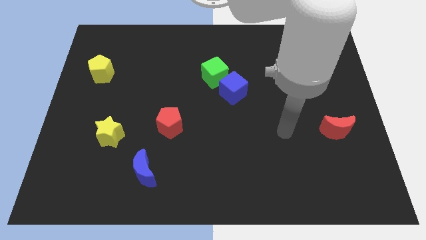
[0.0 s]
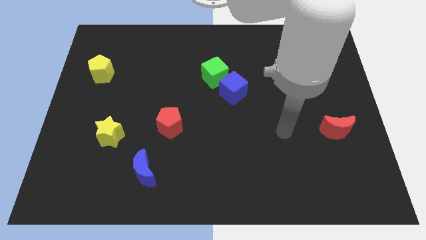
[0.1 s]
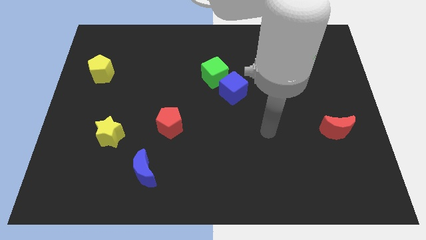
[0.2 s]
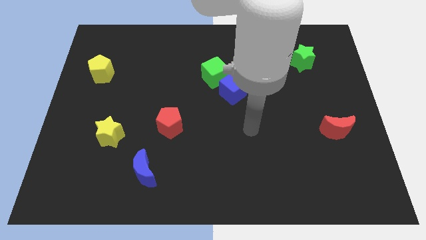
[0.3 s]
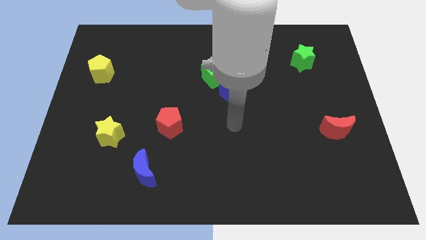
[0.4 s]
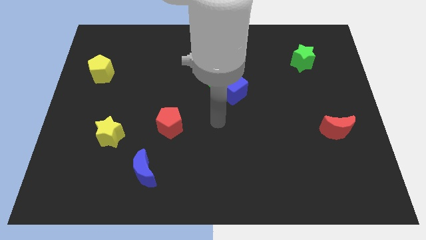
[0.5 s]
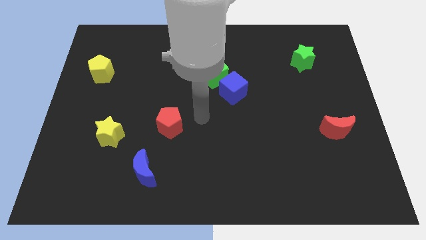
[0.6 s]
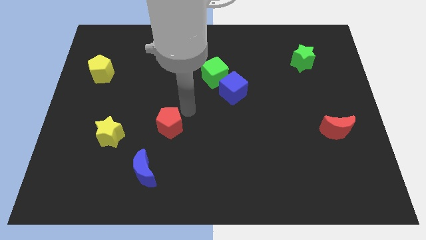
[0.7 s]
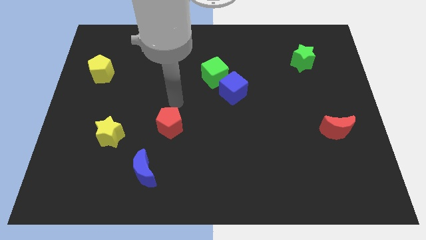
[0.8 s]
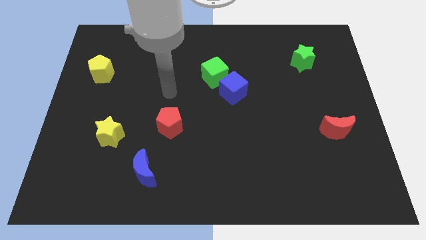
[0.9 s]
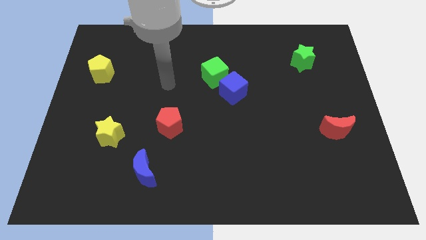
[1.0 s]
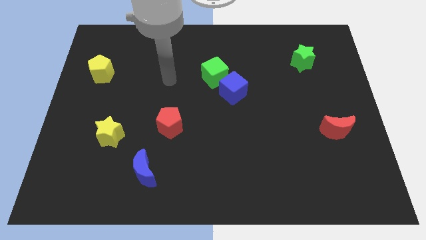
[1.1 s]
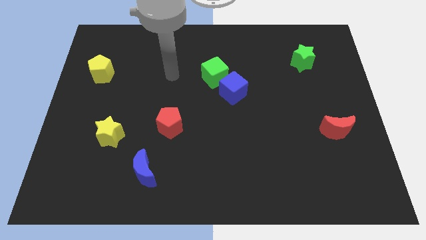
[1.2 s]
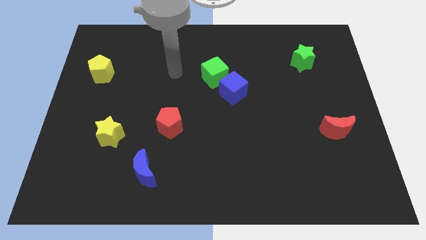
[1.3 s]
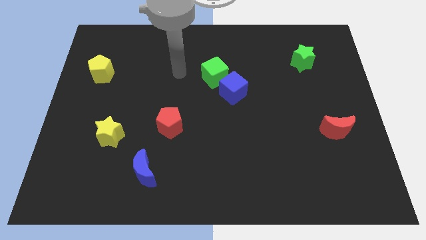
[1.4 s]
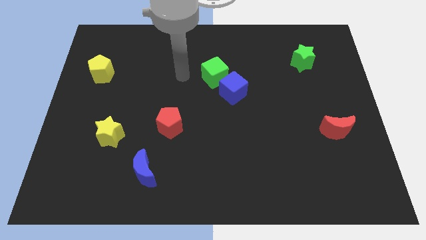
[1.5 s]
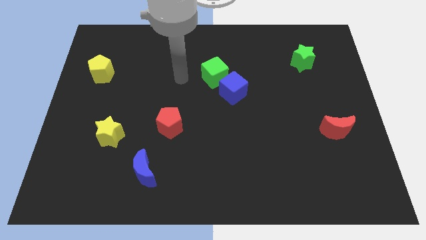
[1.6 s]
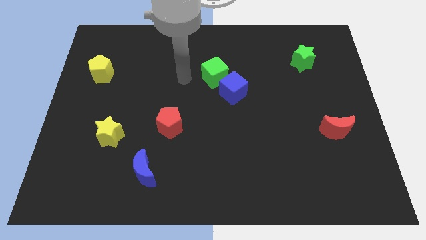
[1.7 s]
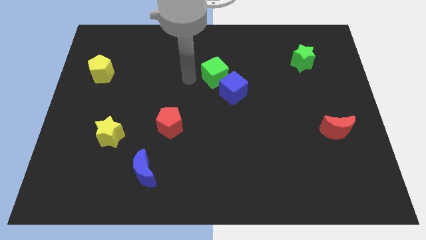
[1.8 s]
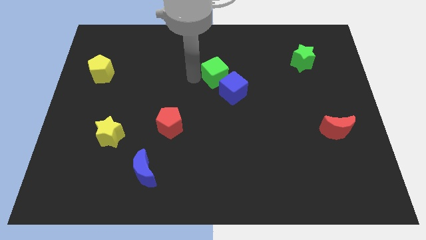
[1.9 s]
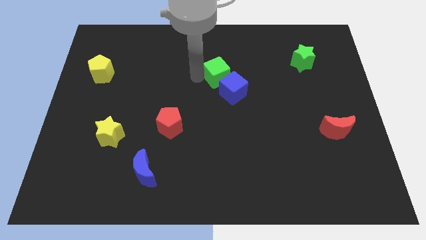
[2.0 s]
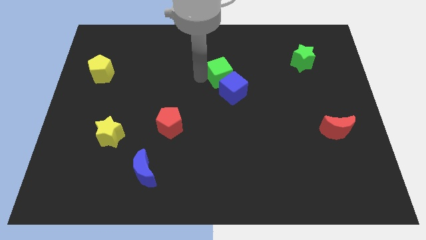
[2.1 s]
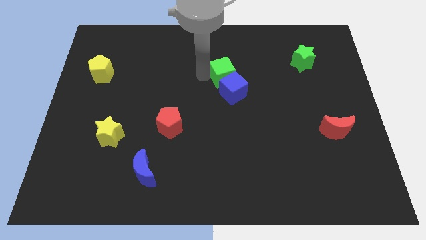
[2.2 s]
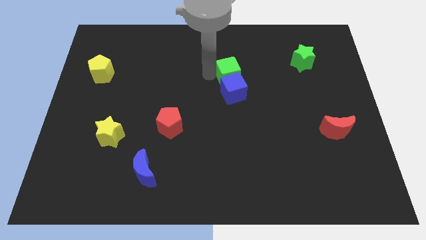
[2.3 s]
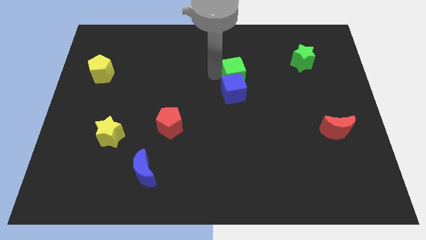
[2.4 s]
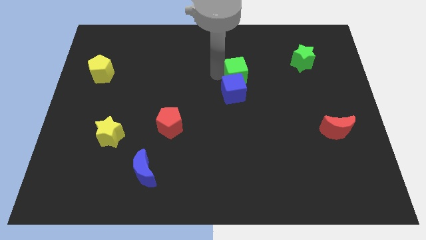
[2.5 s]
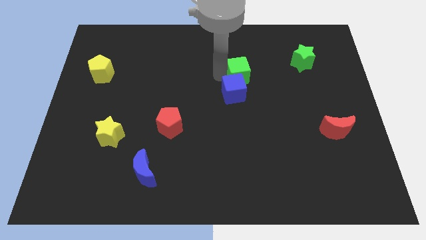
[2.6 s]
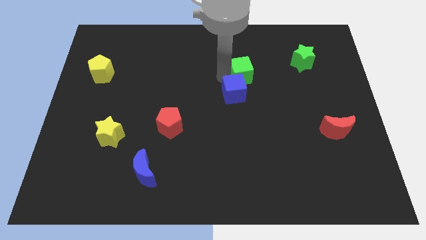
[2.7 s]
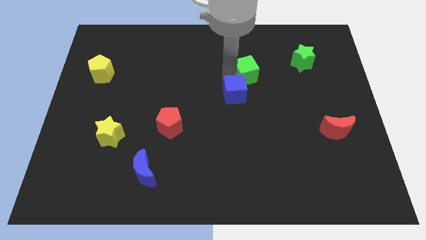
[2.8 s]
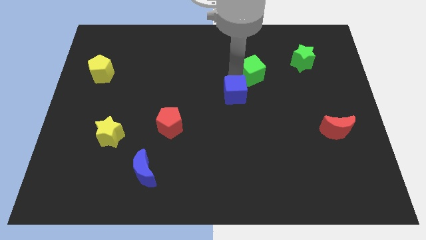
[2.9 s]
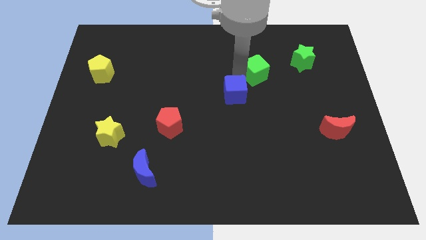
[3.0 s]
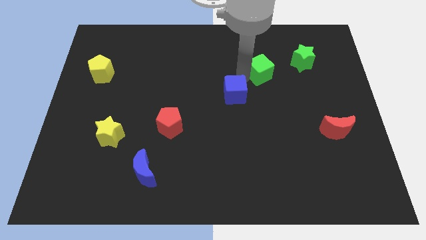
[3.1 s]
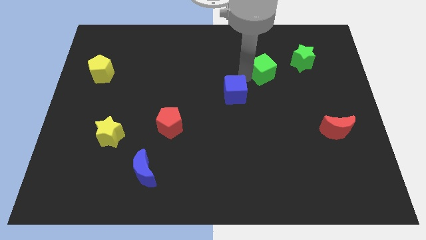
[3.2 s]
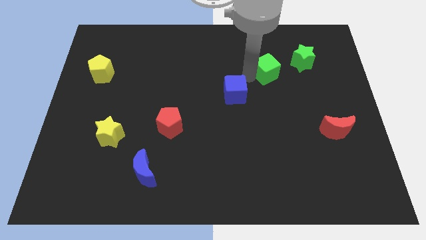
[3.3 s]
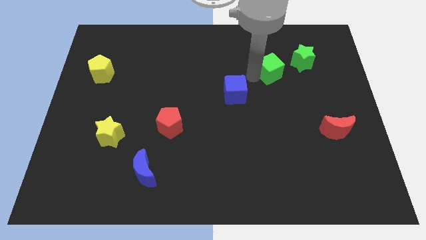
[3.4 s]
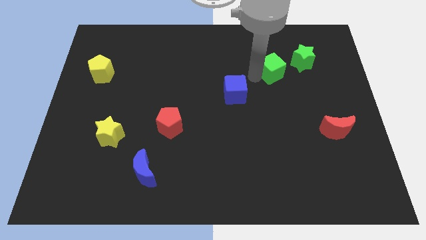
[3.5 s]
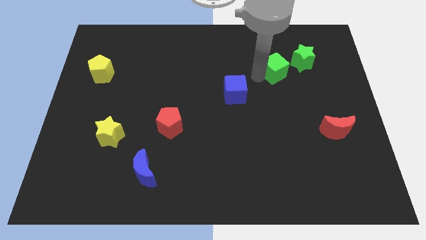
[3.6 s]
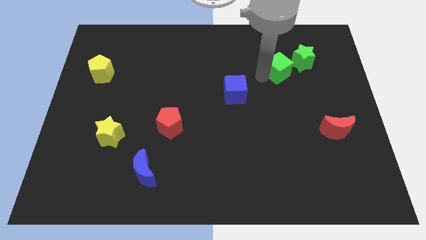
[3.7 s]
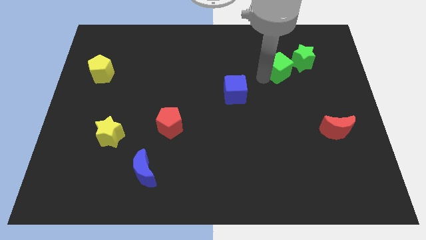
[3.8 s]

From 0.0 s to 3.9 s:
slightly push the green cube towards the green star

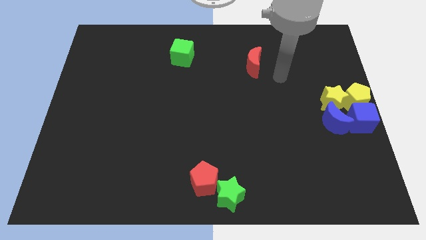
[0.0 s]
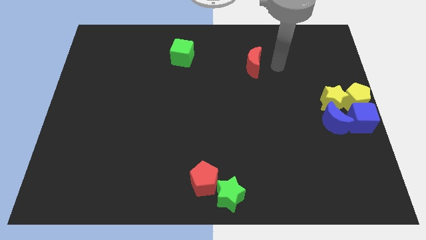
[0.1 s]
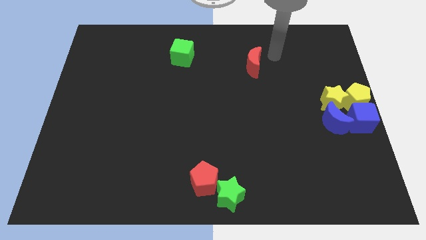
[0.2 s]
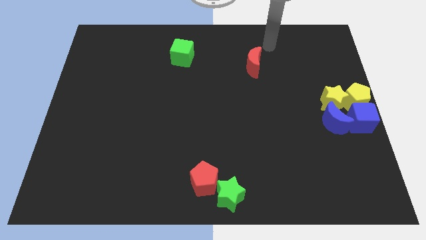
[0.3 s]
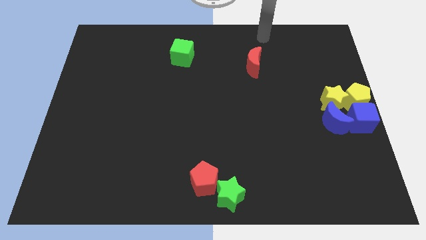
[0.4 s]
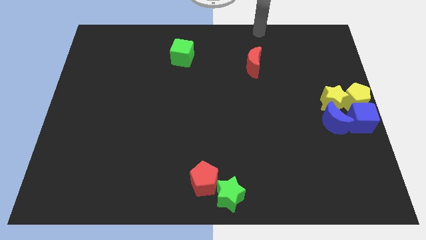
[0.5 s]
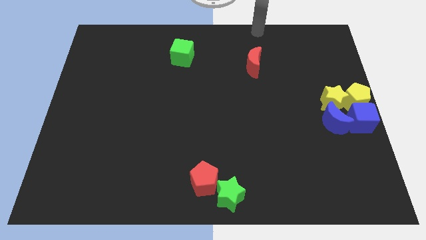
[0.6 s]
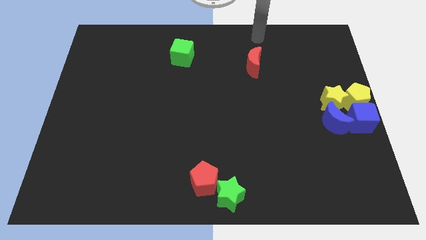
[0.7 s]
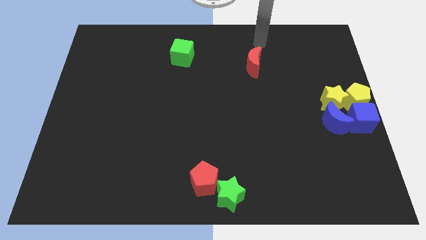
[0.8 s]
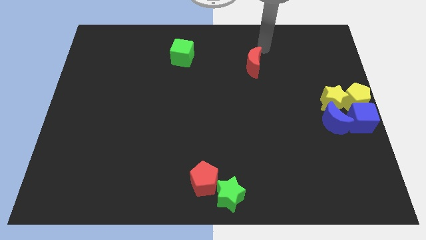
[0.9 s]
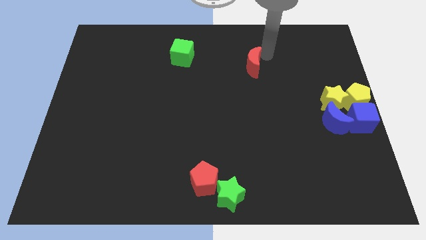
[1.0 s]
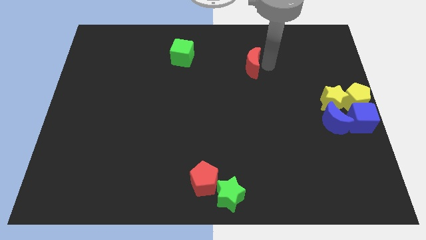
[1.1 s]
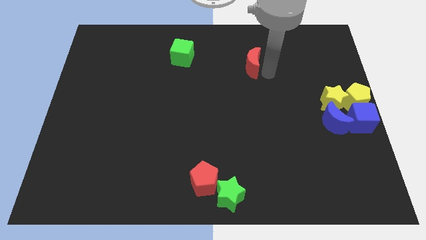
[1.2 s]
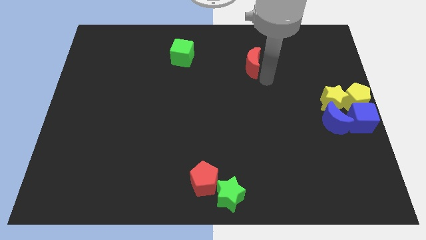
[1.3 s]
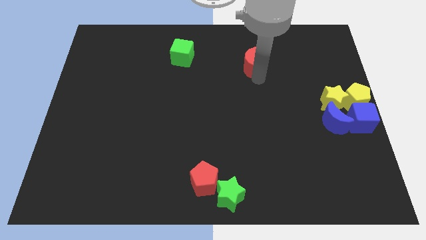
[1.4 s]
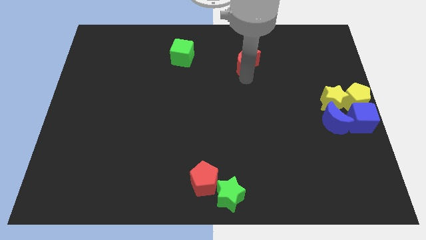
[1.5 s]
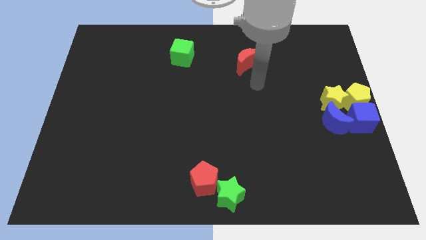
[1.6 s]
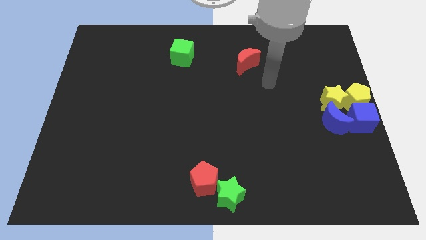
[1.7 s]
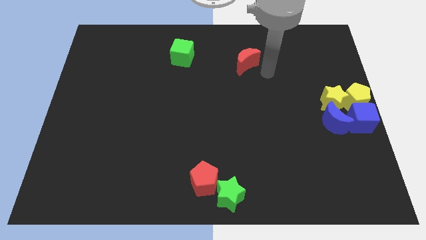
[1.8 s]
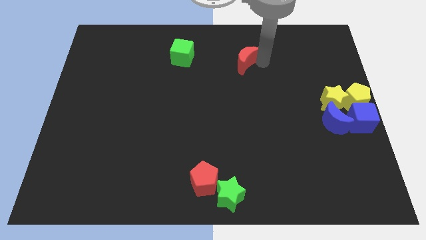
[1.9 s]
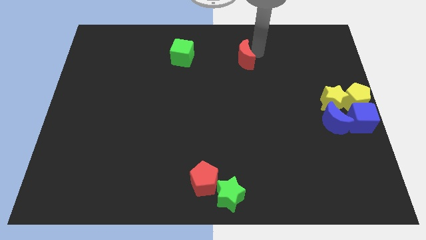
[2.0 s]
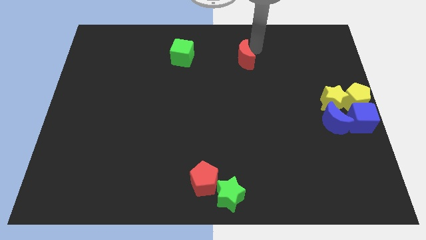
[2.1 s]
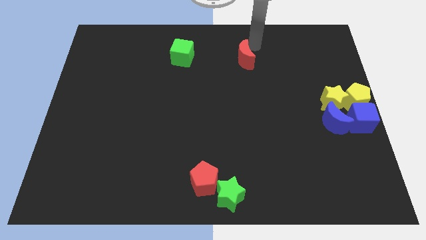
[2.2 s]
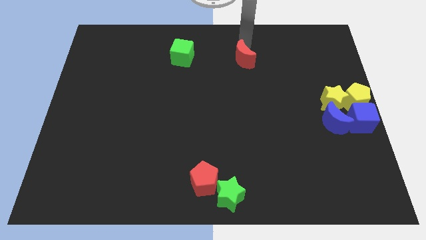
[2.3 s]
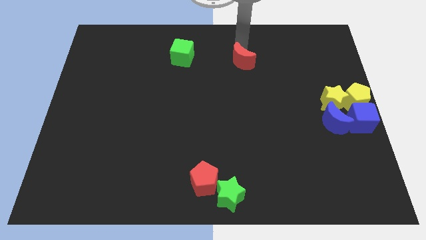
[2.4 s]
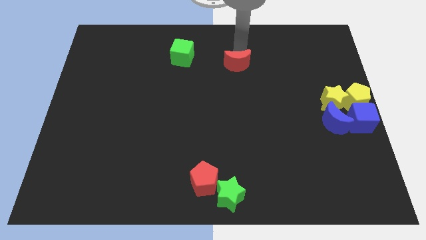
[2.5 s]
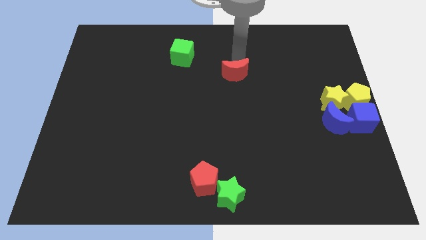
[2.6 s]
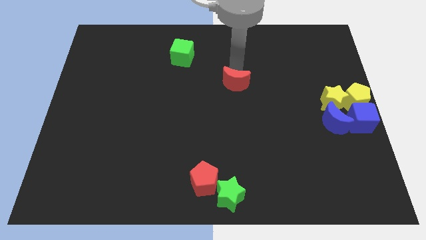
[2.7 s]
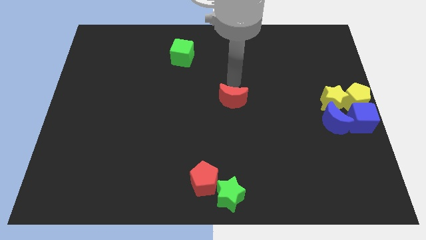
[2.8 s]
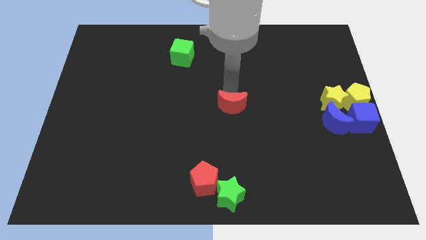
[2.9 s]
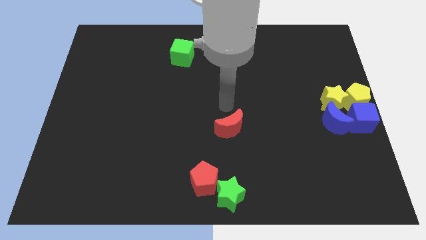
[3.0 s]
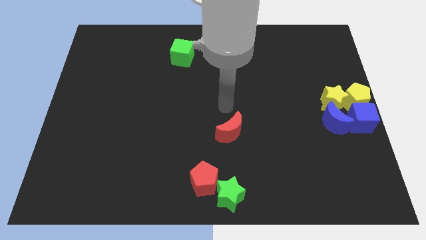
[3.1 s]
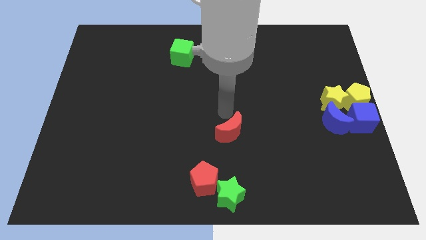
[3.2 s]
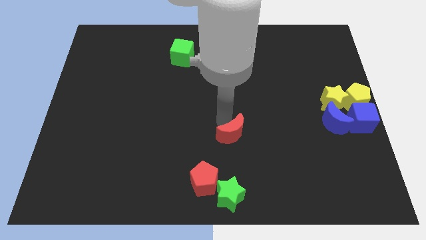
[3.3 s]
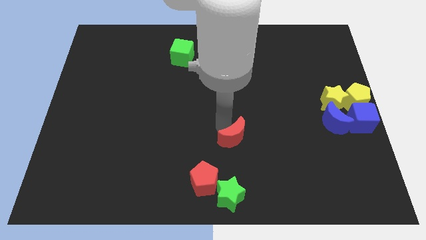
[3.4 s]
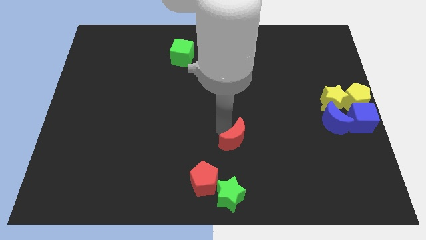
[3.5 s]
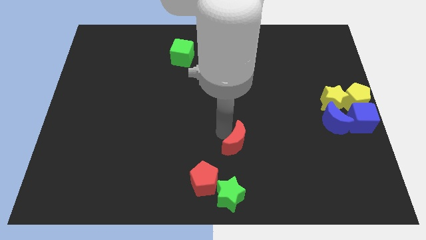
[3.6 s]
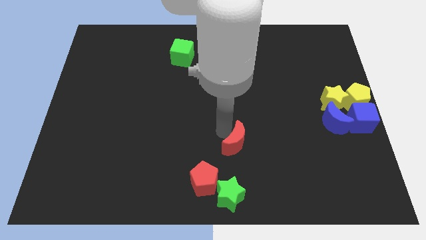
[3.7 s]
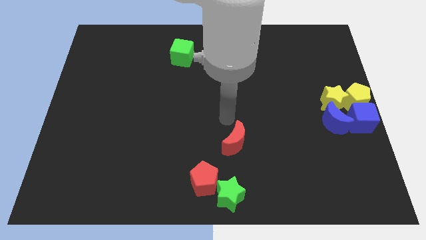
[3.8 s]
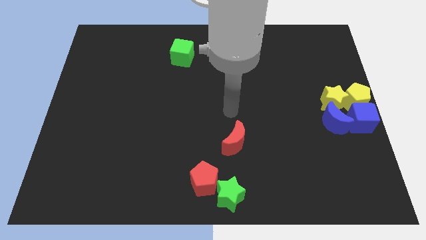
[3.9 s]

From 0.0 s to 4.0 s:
slide the red crescent diagonally on the top right side of the red pentagon

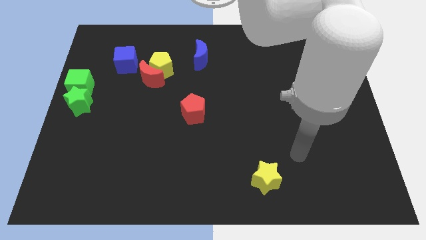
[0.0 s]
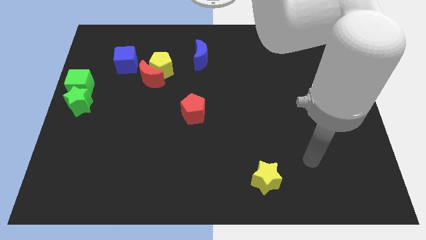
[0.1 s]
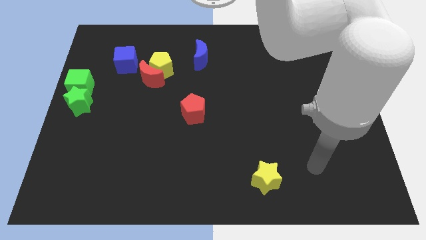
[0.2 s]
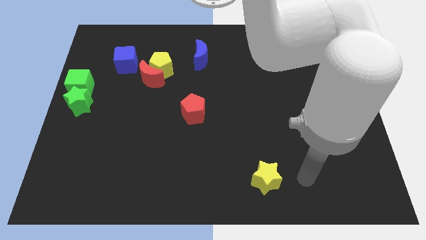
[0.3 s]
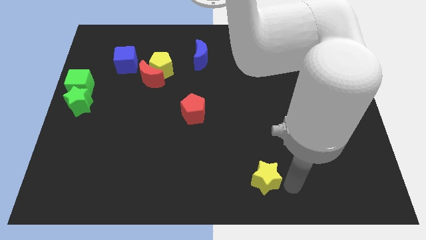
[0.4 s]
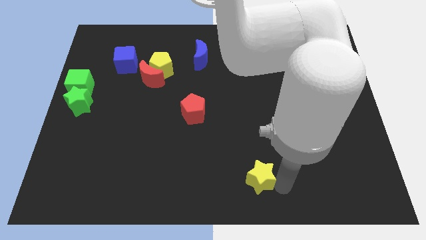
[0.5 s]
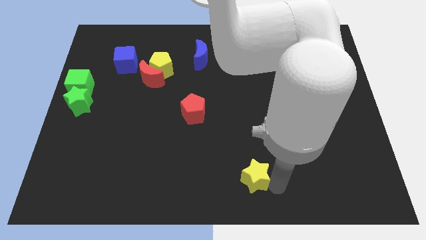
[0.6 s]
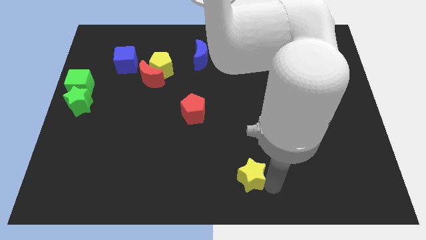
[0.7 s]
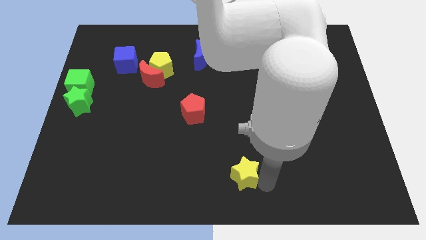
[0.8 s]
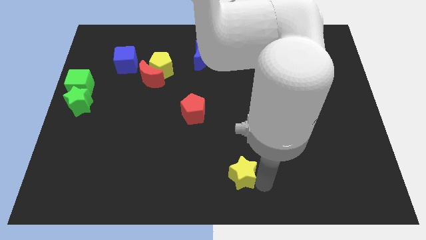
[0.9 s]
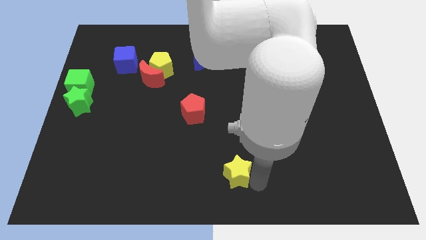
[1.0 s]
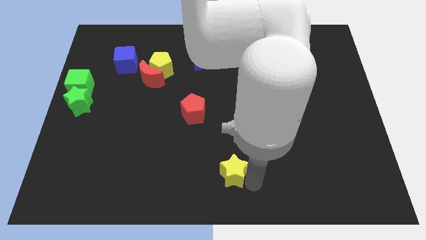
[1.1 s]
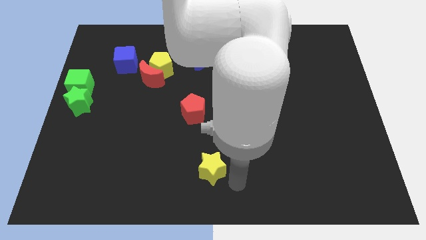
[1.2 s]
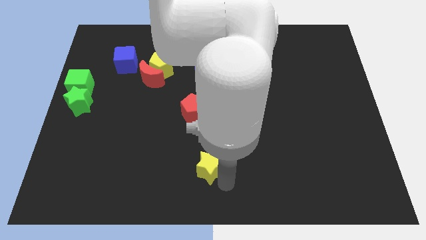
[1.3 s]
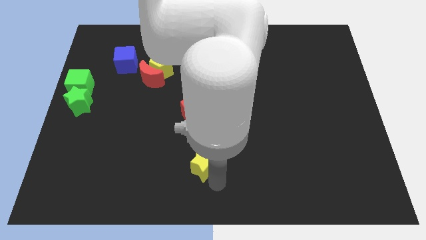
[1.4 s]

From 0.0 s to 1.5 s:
place the yellow star below the red pentagon
